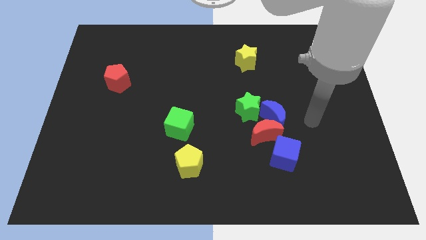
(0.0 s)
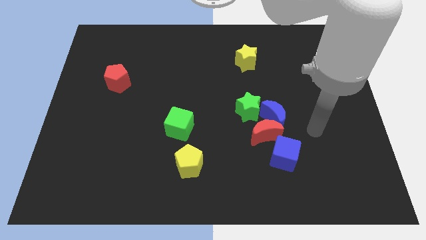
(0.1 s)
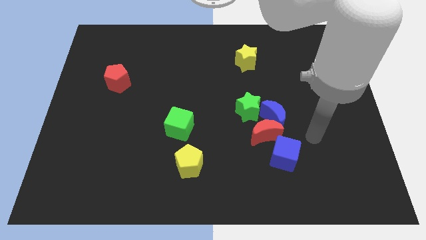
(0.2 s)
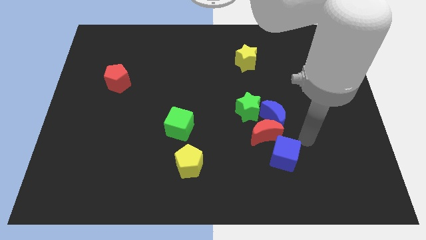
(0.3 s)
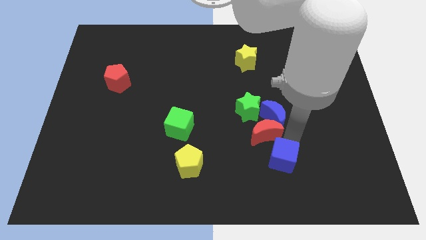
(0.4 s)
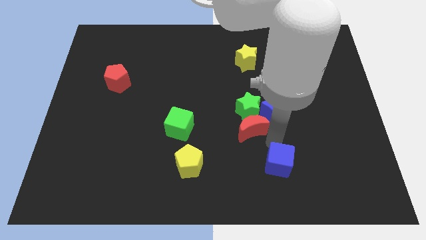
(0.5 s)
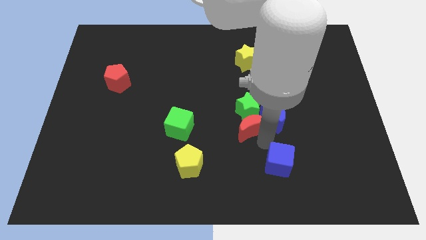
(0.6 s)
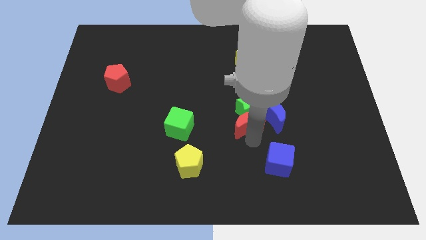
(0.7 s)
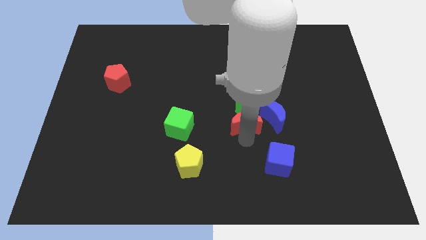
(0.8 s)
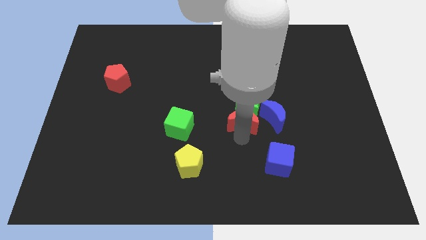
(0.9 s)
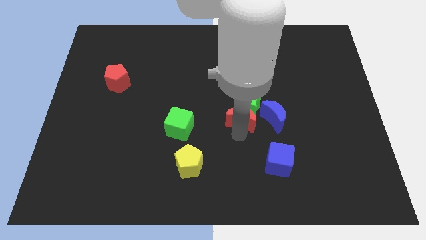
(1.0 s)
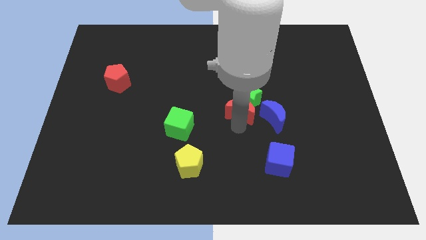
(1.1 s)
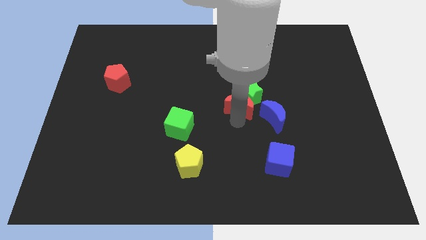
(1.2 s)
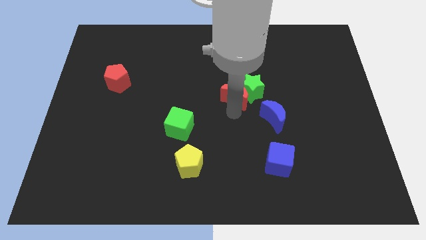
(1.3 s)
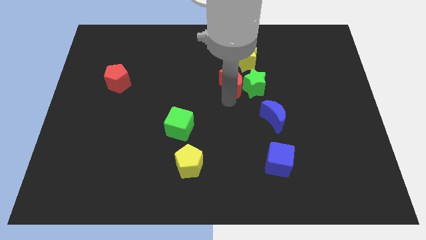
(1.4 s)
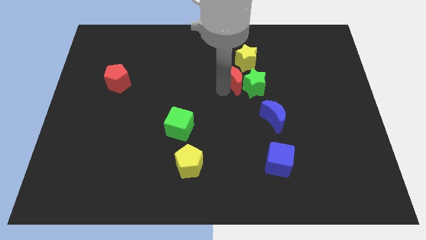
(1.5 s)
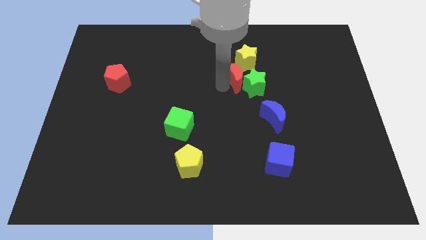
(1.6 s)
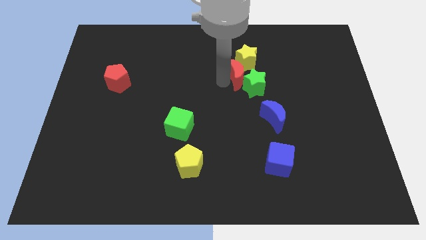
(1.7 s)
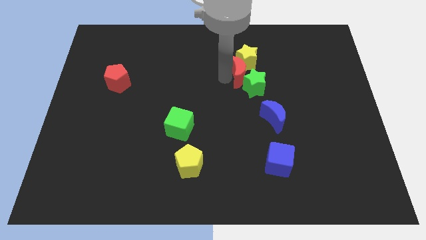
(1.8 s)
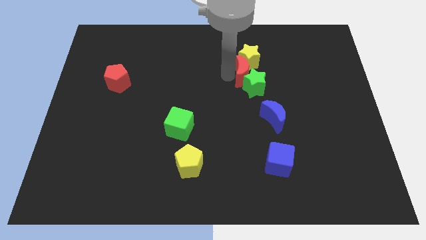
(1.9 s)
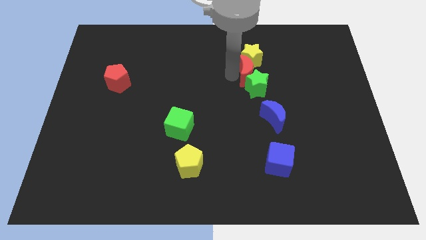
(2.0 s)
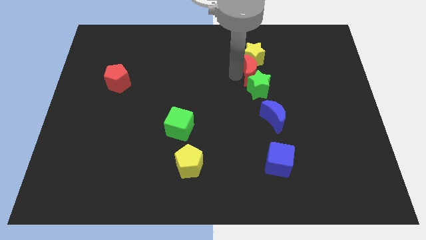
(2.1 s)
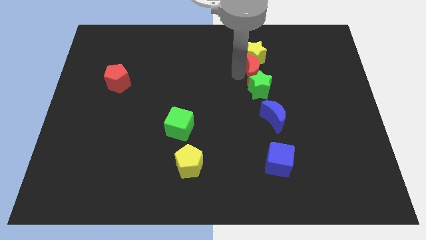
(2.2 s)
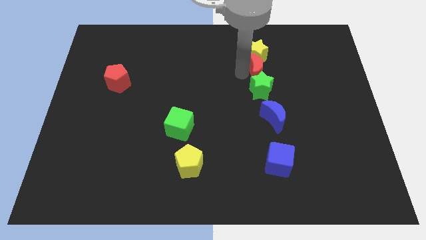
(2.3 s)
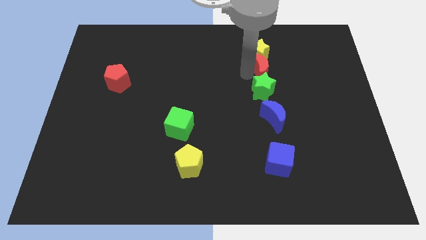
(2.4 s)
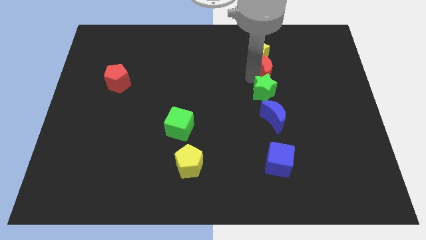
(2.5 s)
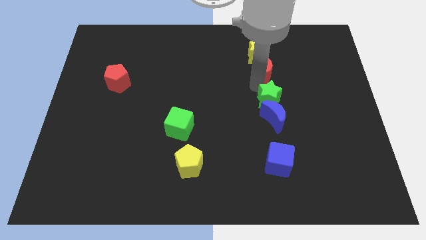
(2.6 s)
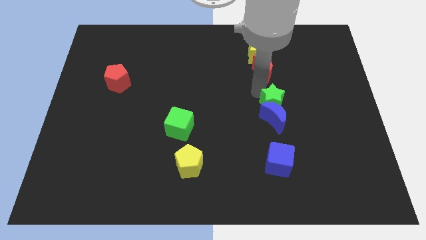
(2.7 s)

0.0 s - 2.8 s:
move the red crescent in between yellow star and green star

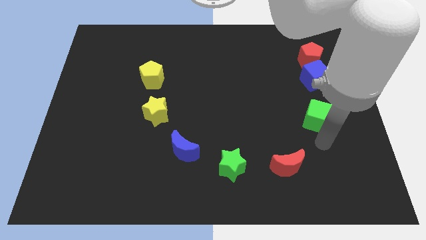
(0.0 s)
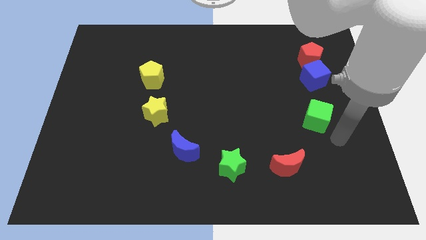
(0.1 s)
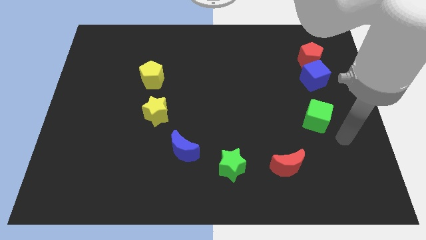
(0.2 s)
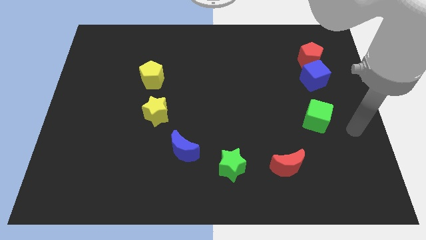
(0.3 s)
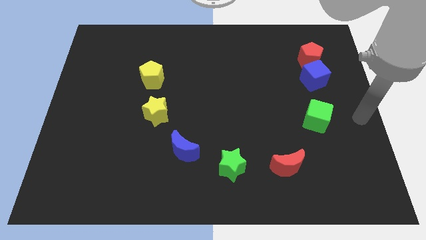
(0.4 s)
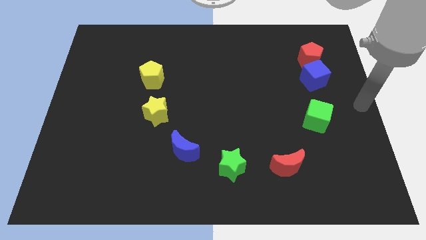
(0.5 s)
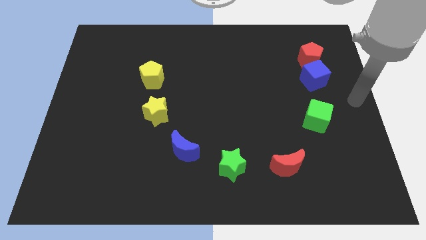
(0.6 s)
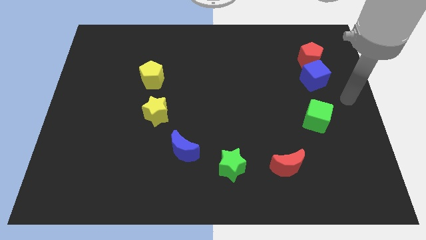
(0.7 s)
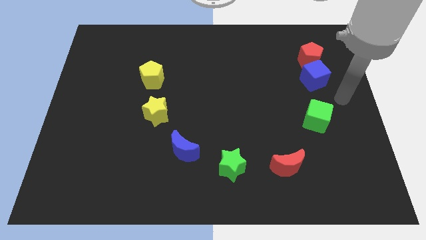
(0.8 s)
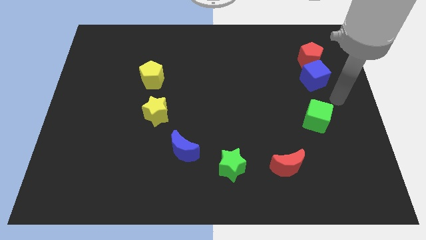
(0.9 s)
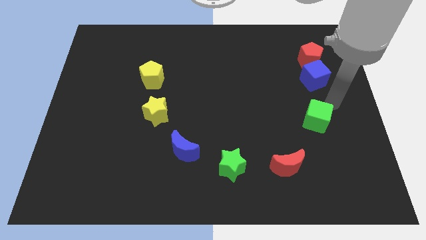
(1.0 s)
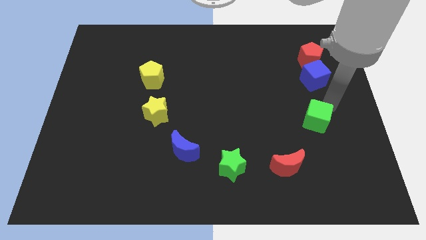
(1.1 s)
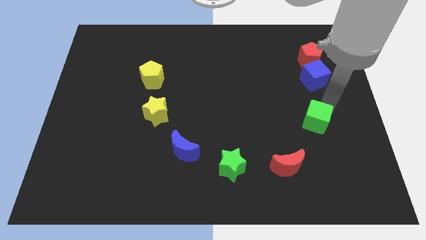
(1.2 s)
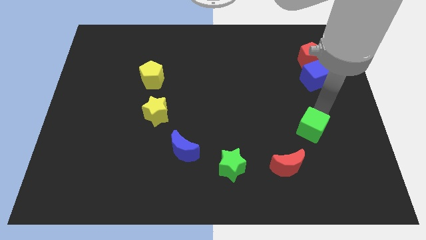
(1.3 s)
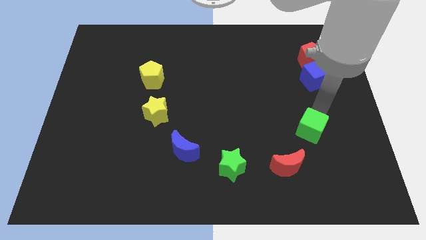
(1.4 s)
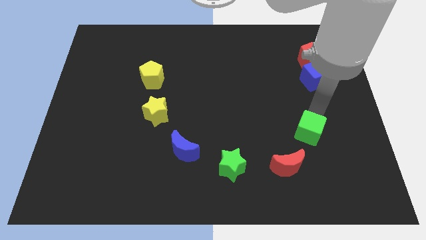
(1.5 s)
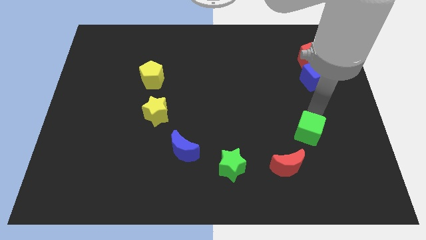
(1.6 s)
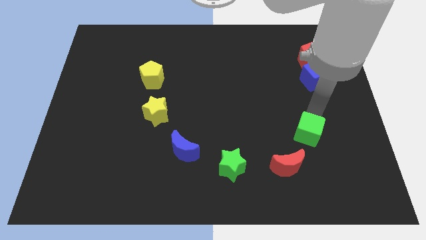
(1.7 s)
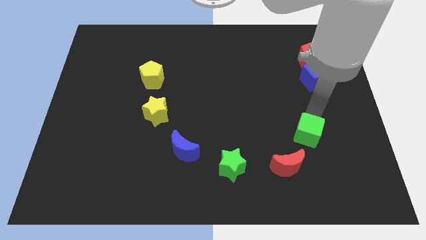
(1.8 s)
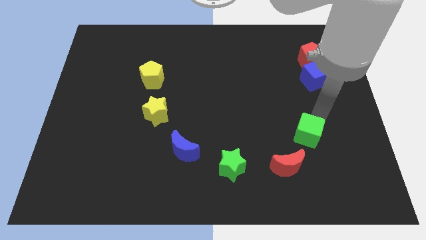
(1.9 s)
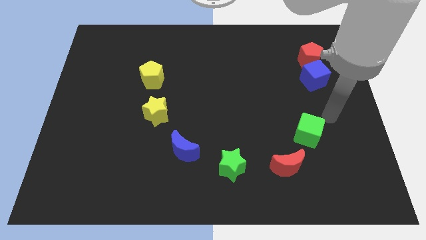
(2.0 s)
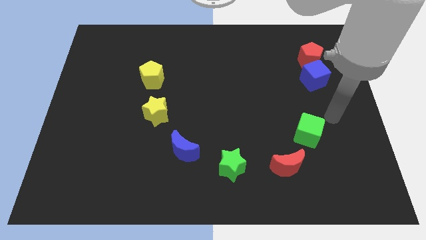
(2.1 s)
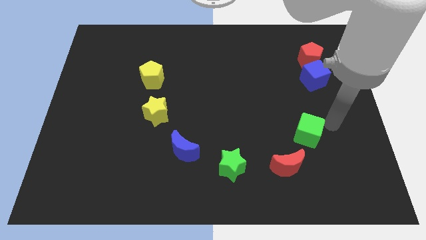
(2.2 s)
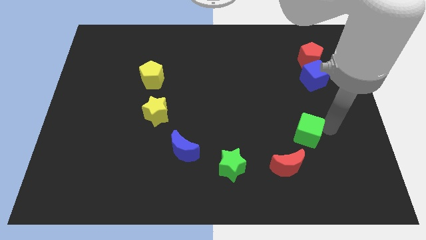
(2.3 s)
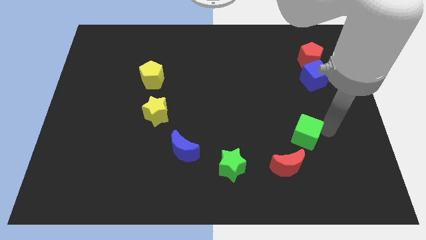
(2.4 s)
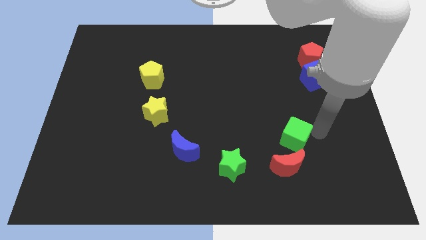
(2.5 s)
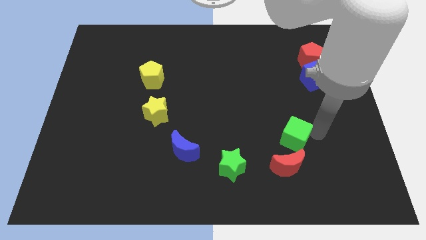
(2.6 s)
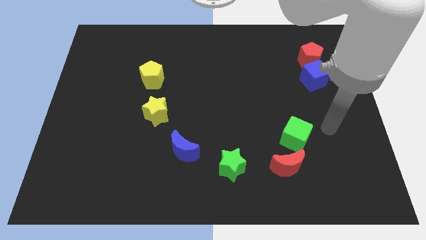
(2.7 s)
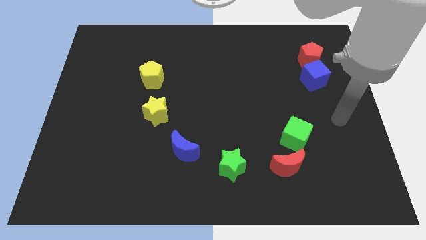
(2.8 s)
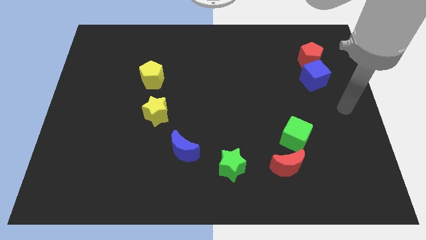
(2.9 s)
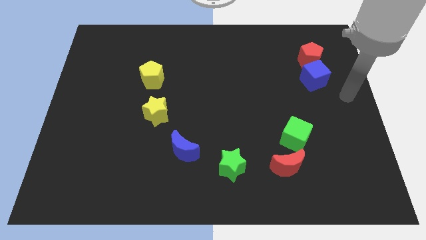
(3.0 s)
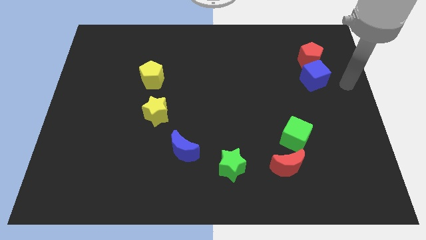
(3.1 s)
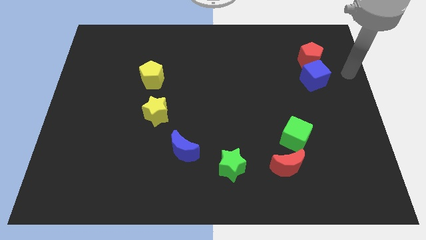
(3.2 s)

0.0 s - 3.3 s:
push the green cube to the top right of the red moon

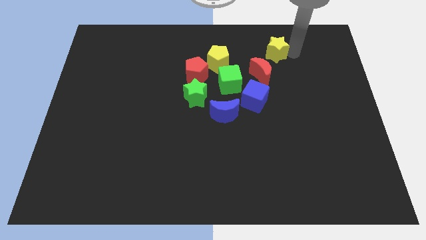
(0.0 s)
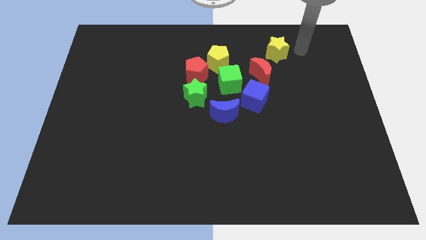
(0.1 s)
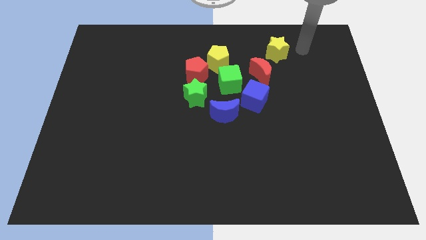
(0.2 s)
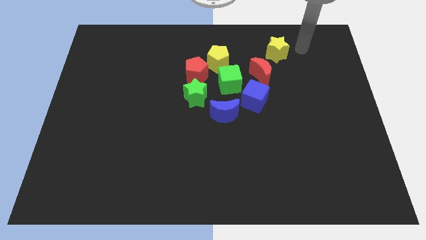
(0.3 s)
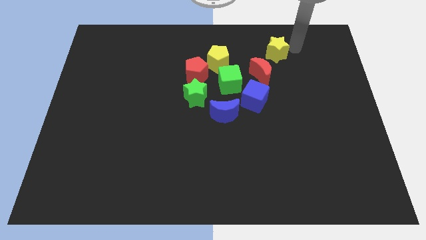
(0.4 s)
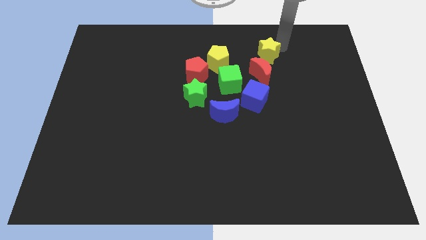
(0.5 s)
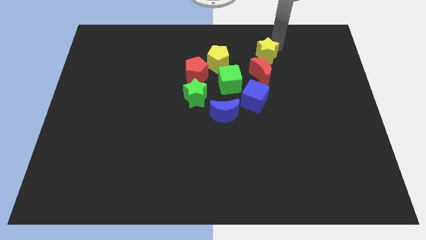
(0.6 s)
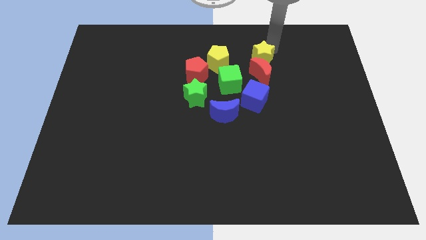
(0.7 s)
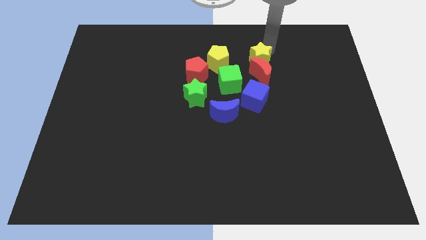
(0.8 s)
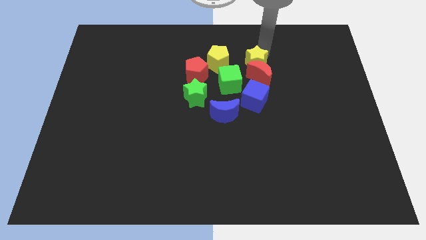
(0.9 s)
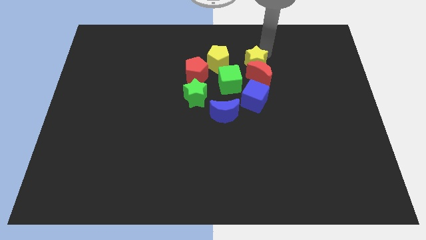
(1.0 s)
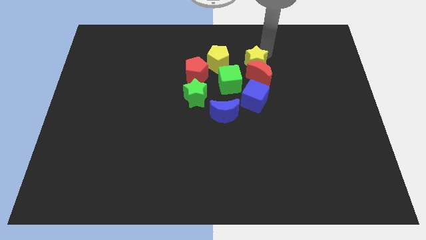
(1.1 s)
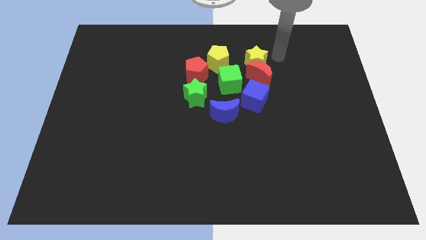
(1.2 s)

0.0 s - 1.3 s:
push the yellow star into the top of the red crescent

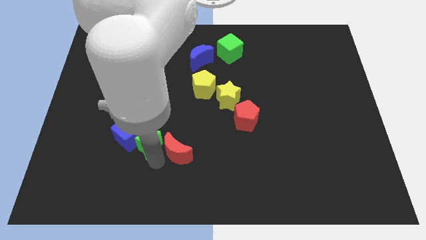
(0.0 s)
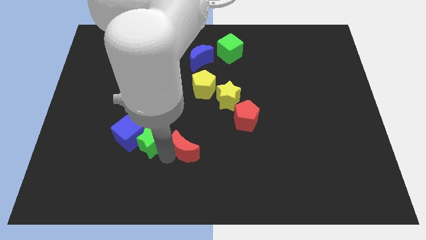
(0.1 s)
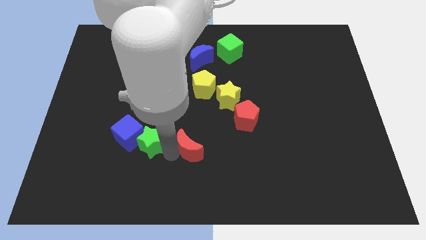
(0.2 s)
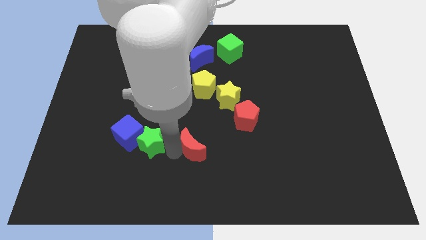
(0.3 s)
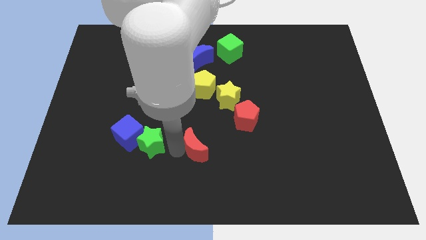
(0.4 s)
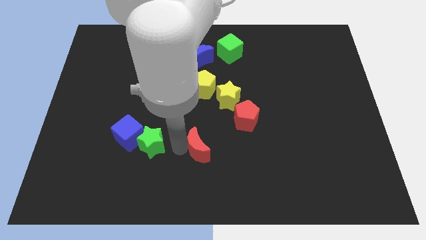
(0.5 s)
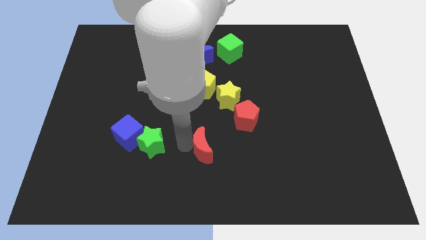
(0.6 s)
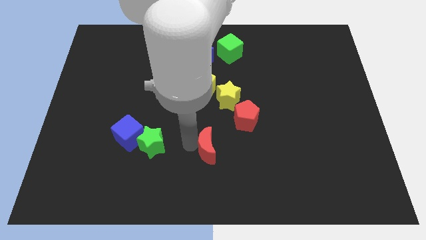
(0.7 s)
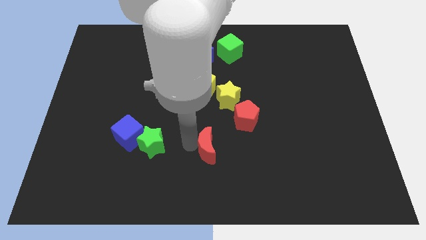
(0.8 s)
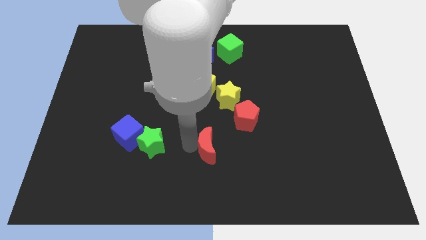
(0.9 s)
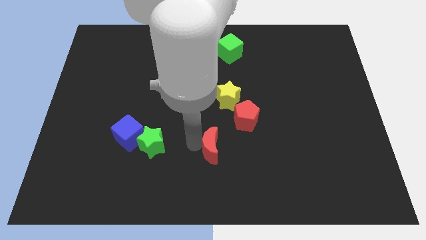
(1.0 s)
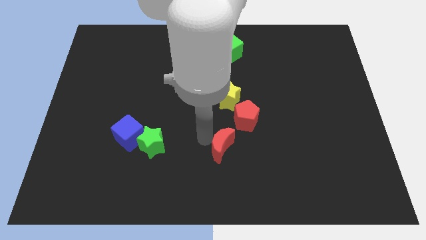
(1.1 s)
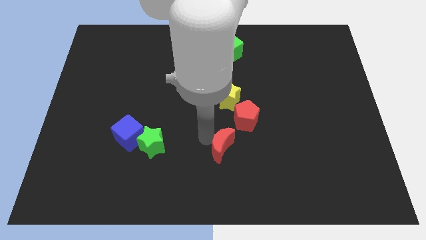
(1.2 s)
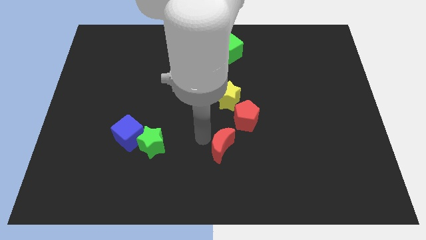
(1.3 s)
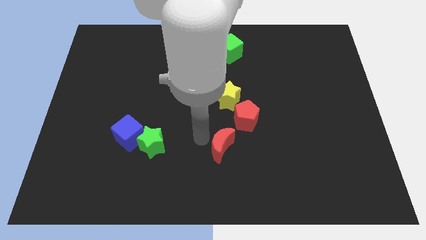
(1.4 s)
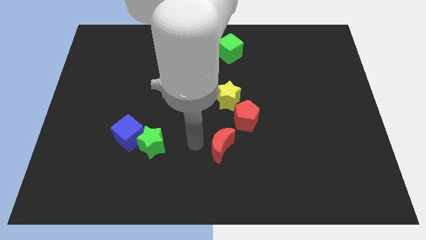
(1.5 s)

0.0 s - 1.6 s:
put the red crescent at the bottom left side of the red pentagon
